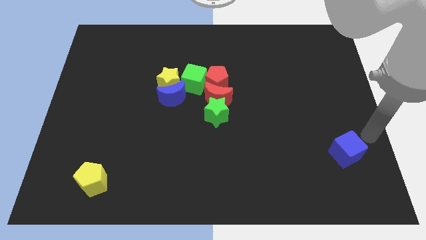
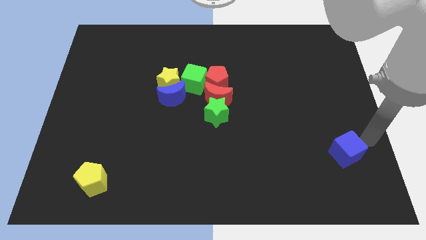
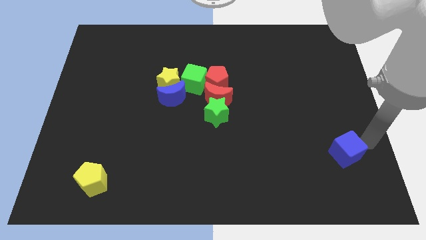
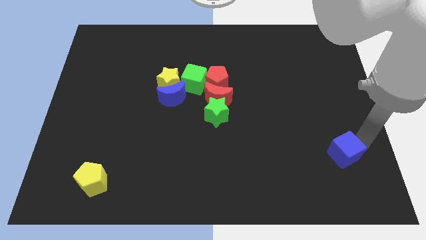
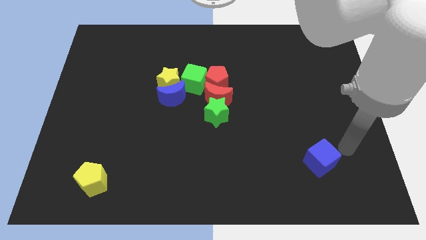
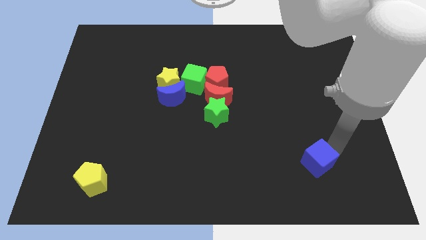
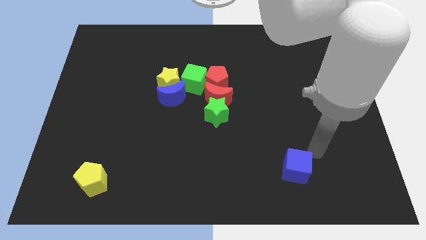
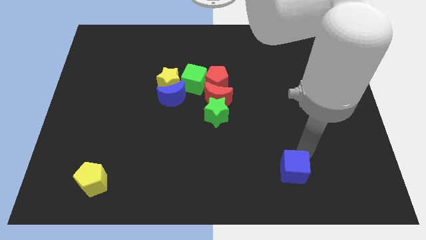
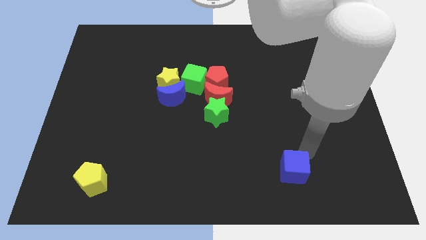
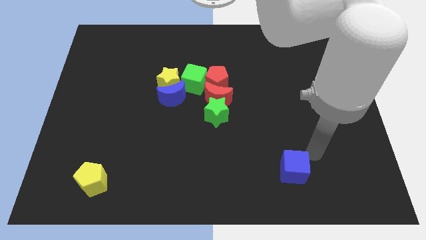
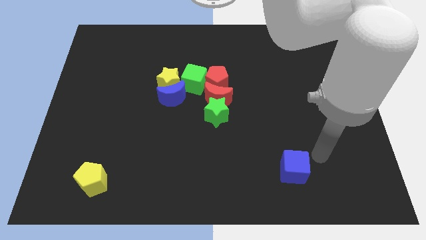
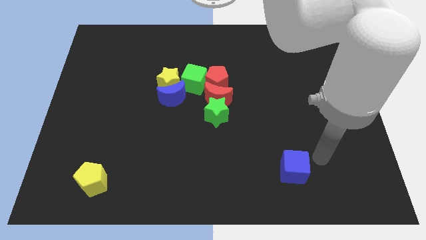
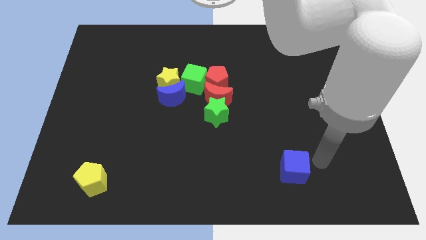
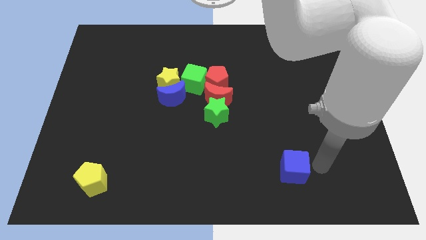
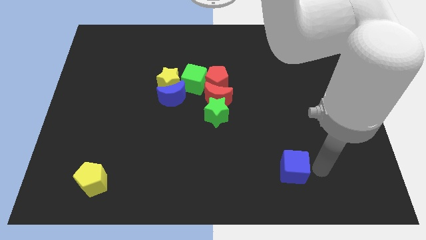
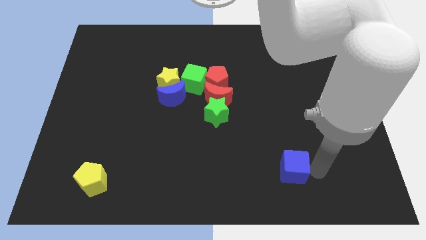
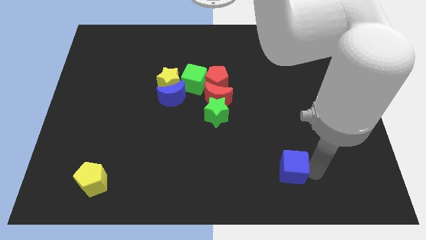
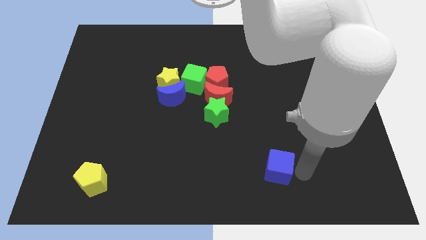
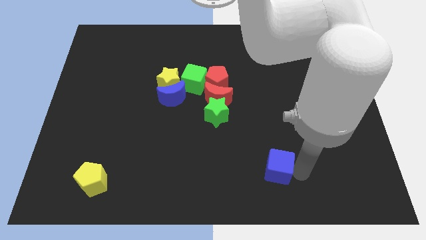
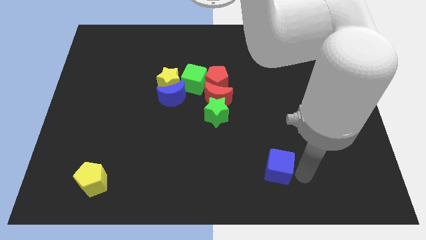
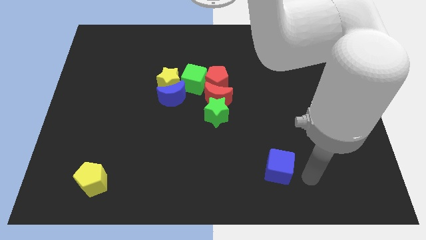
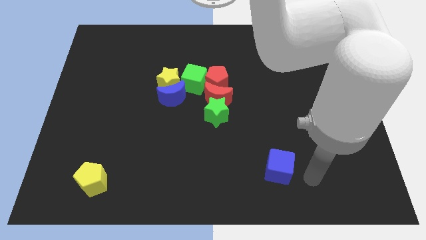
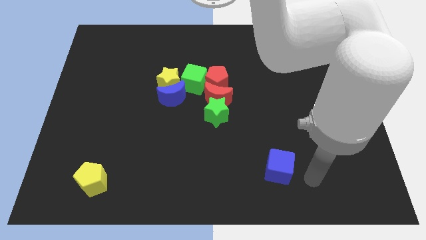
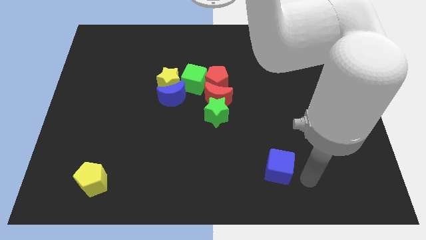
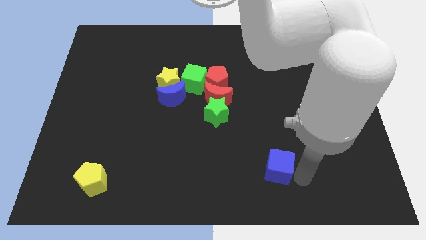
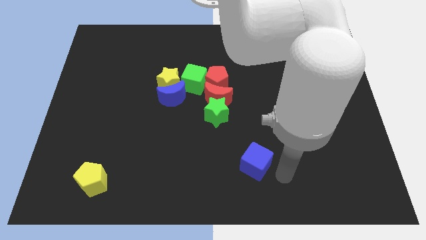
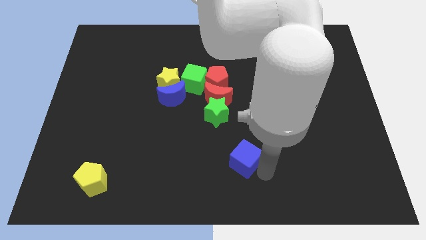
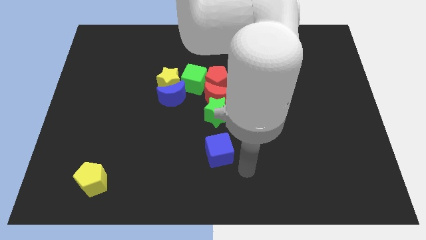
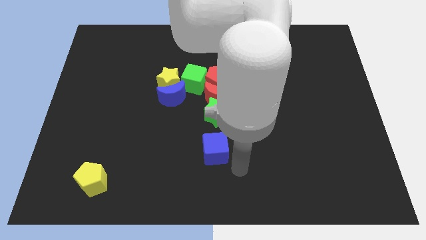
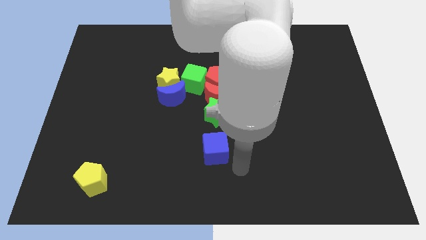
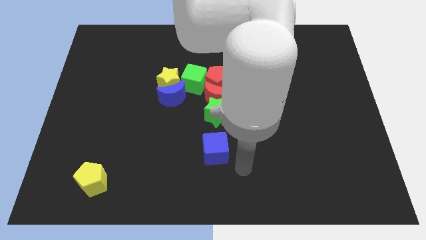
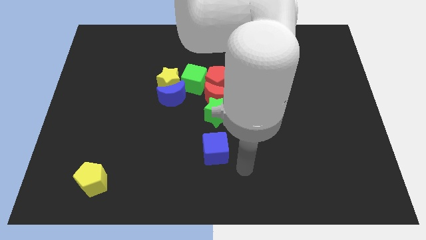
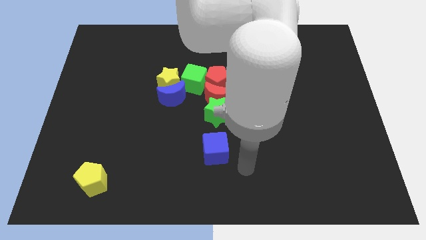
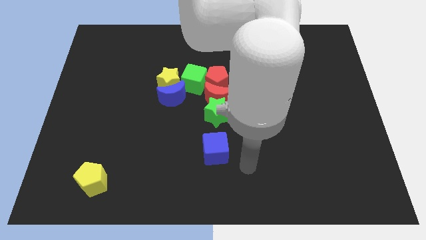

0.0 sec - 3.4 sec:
push the blue cube below the green star

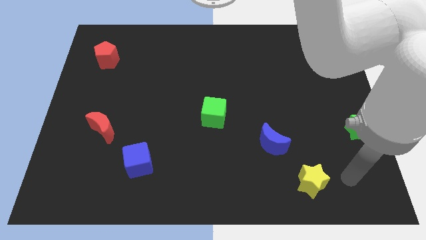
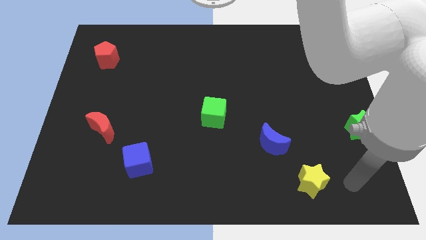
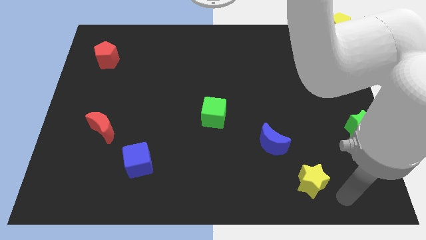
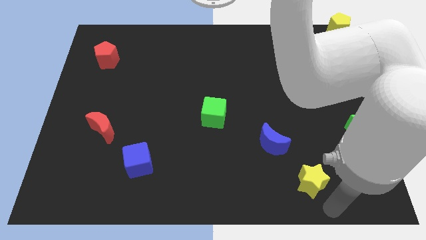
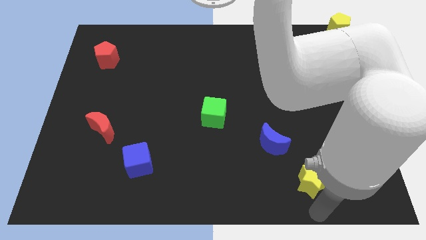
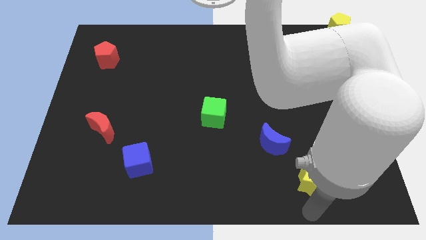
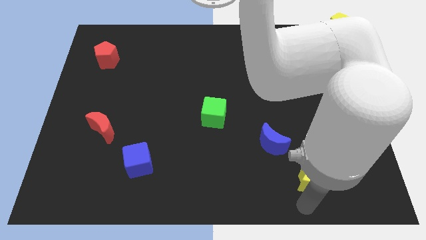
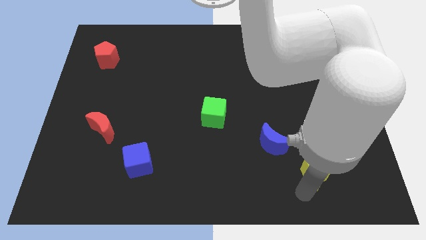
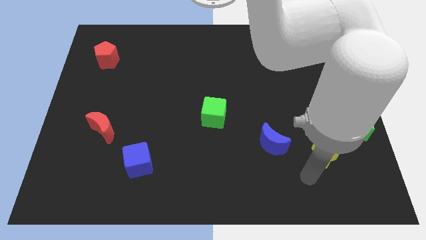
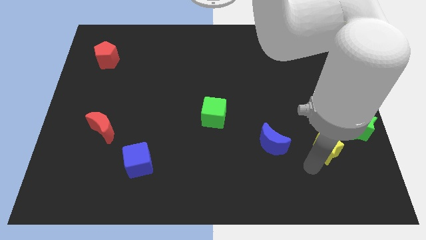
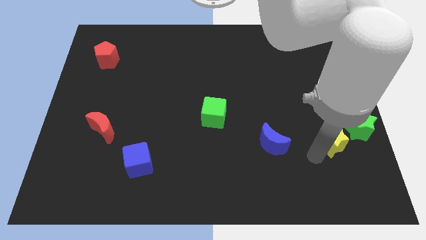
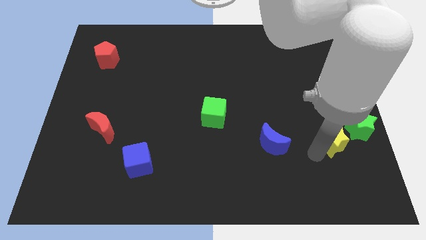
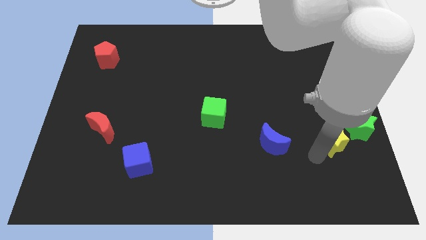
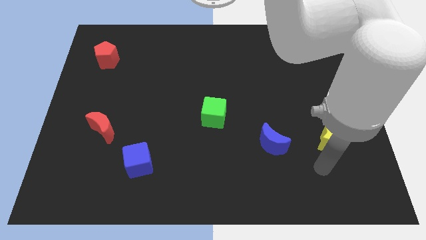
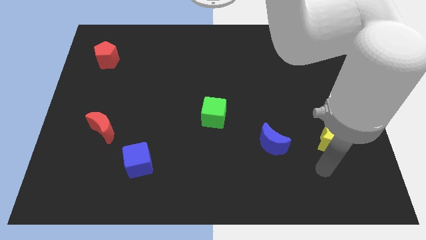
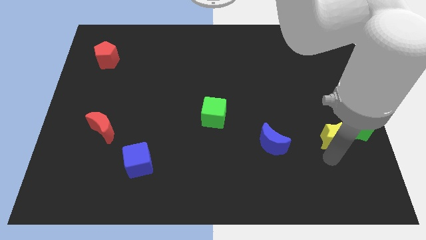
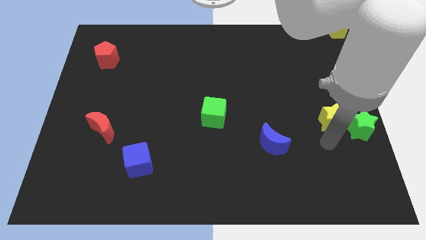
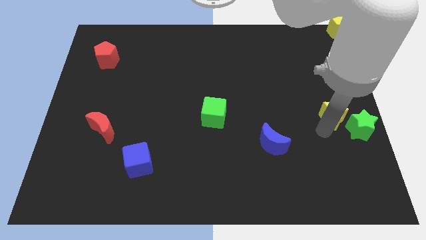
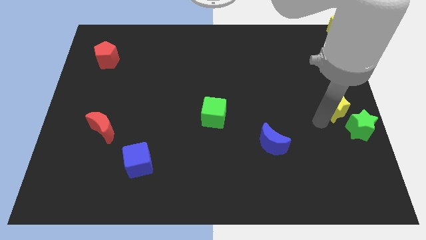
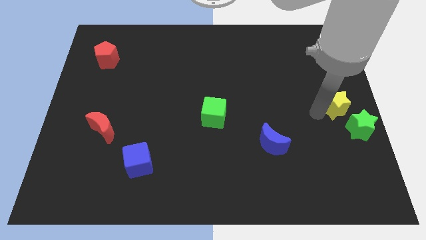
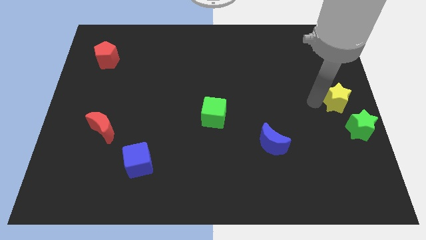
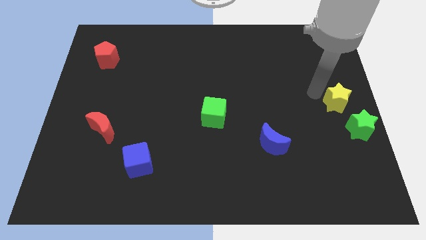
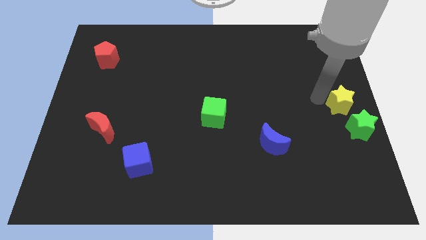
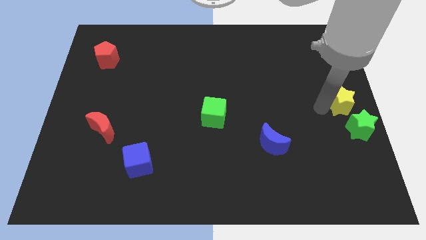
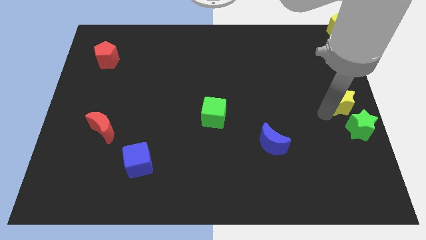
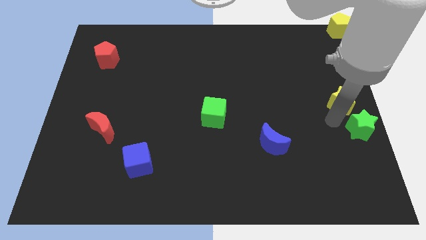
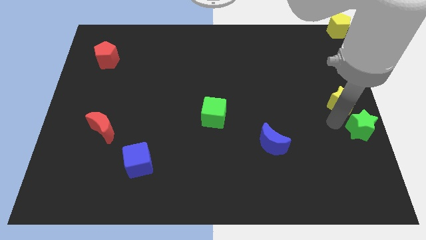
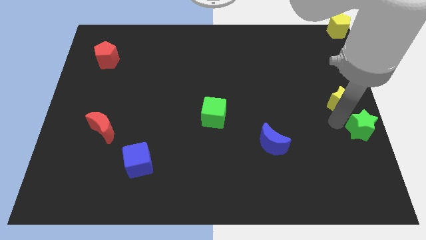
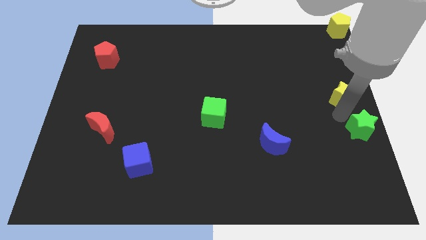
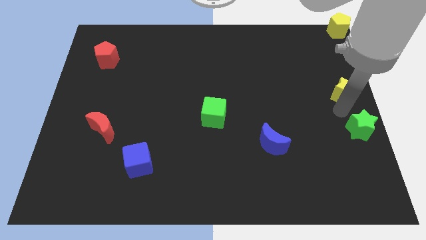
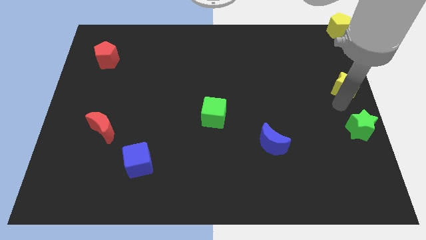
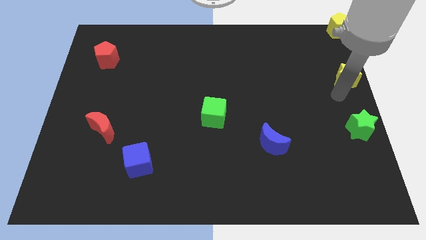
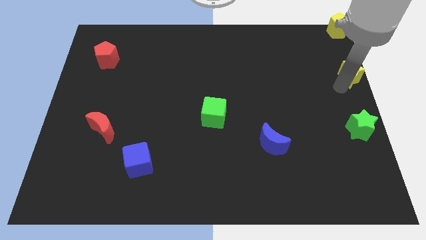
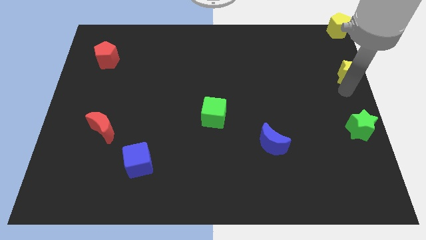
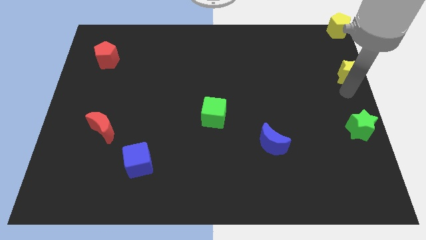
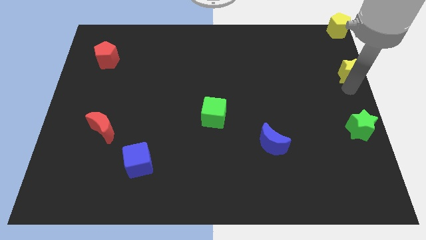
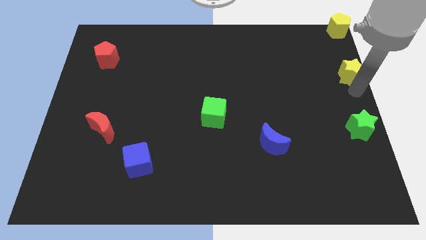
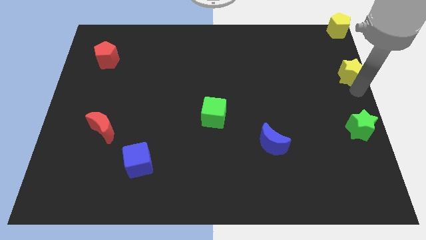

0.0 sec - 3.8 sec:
place the yellow star above the green star

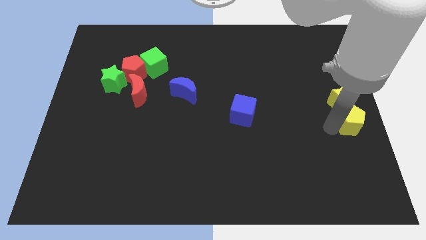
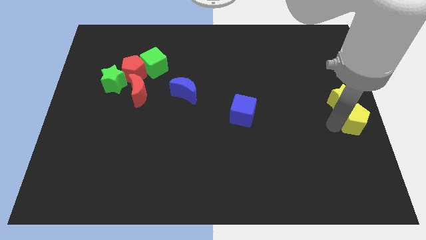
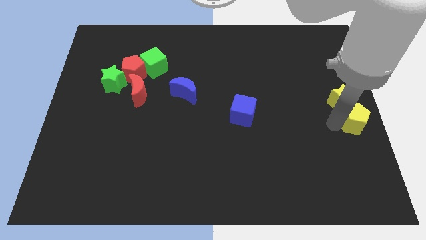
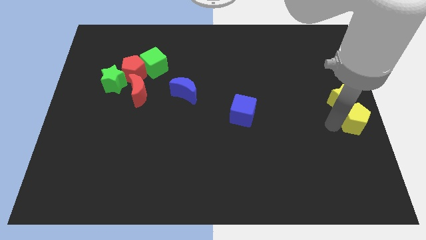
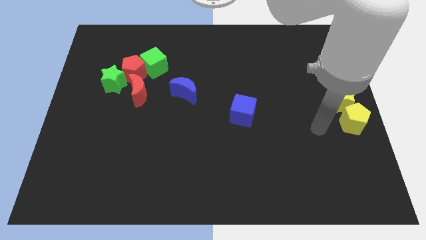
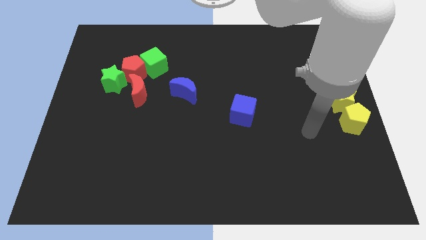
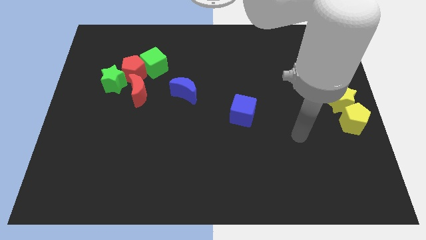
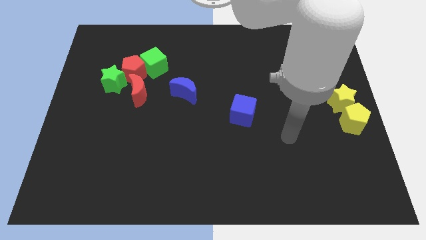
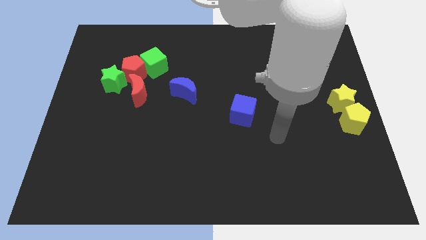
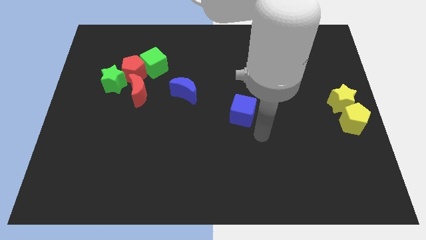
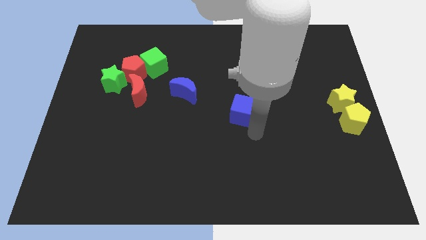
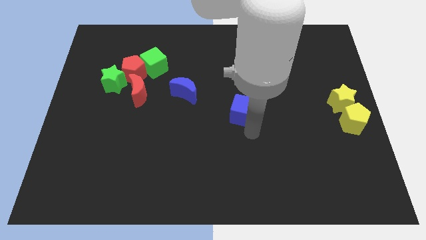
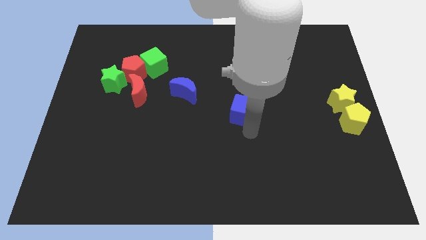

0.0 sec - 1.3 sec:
go away from the yellow pentagon

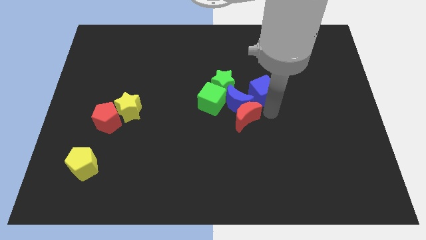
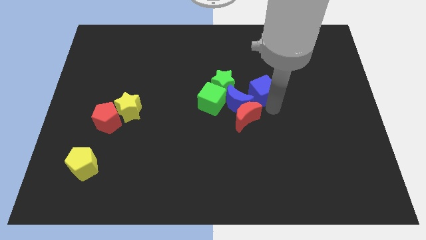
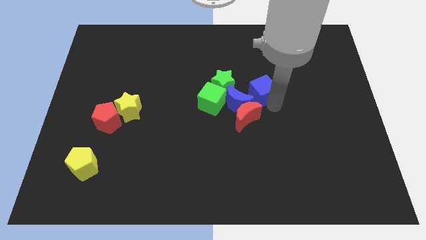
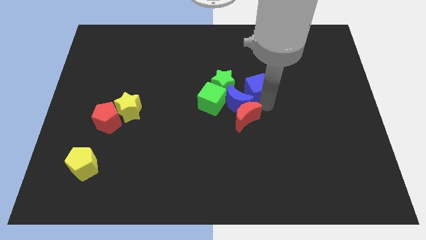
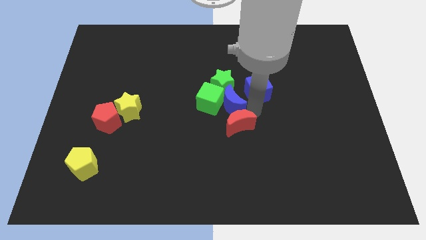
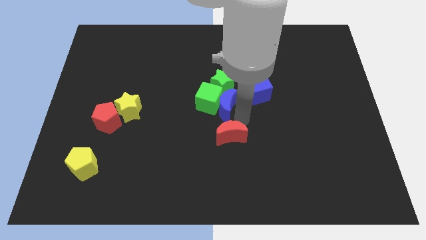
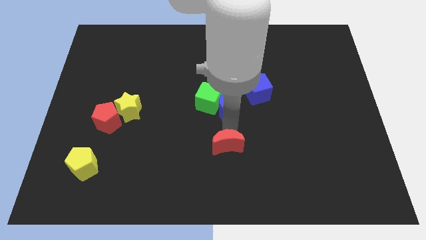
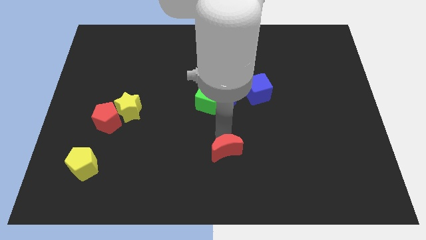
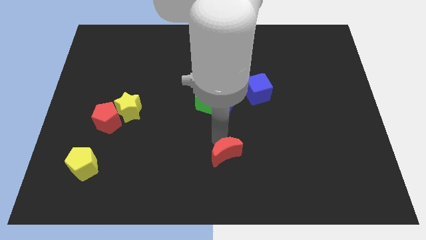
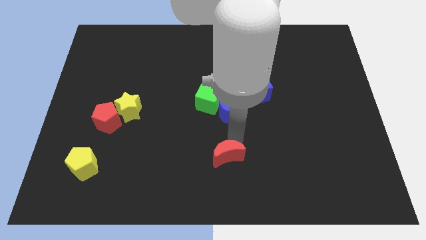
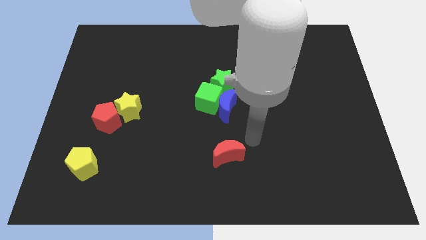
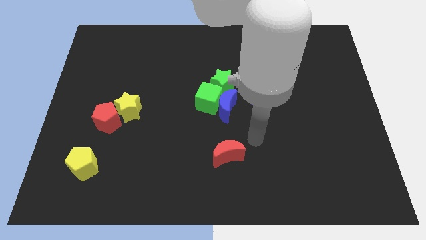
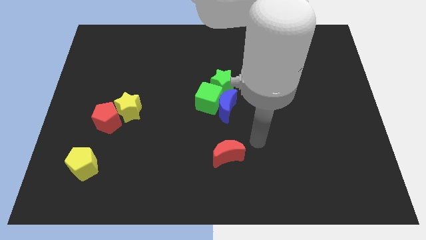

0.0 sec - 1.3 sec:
separate the red moon from the blue moon
